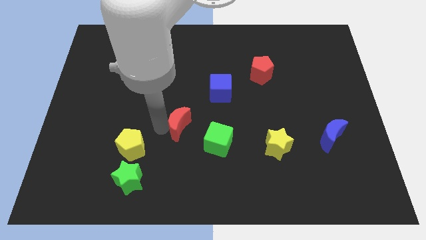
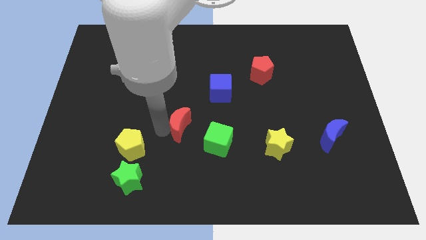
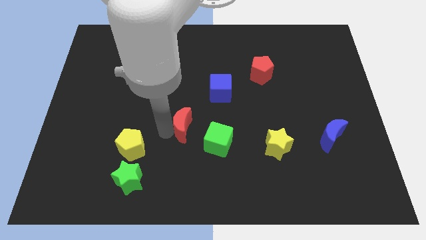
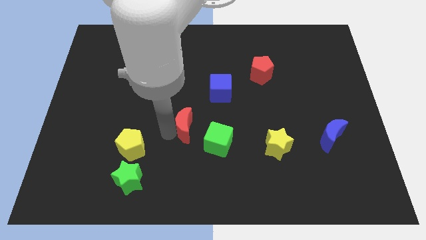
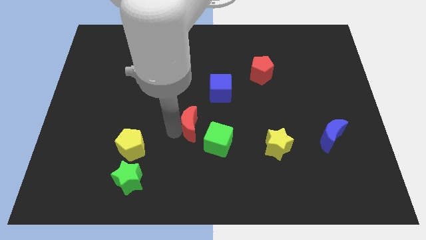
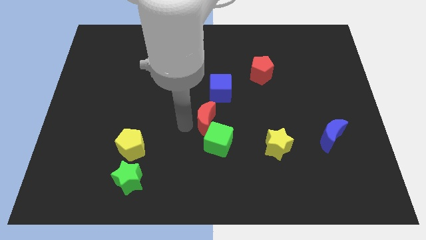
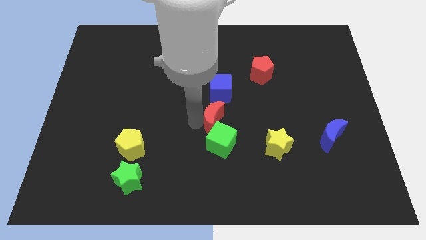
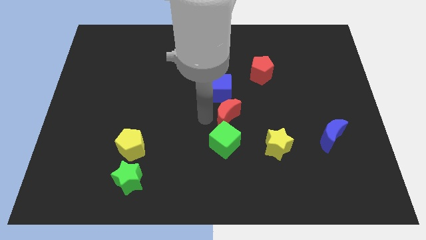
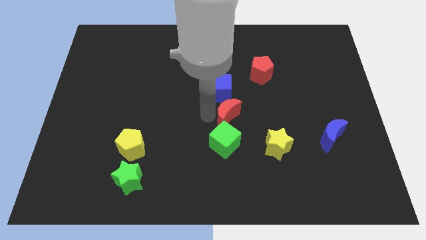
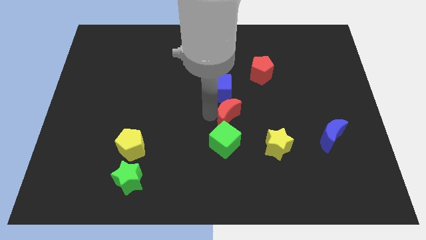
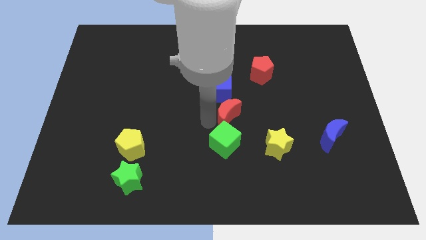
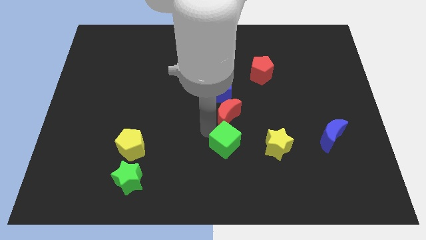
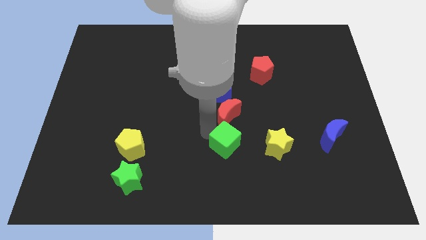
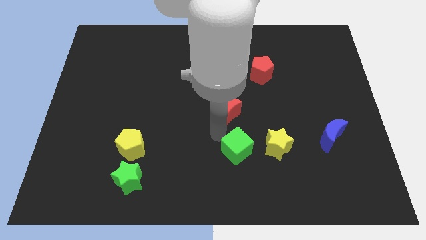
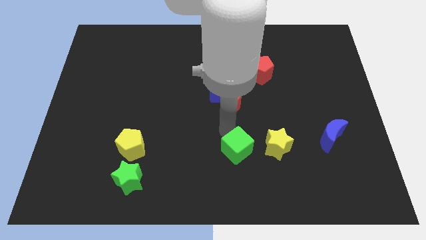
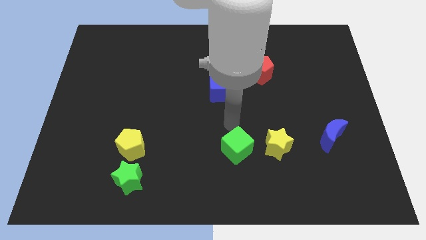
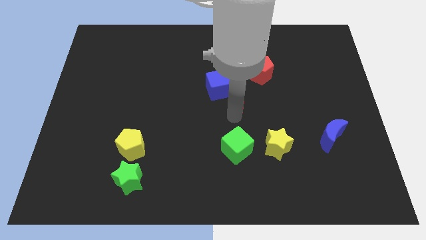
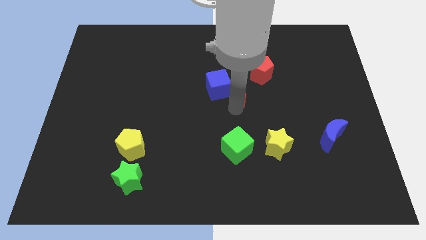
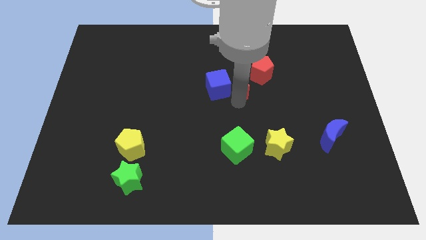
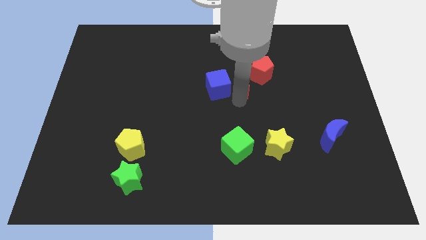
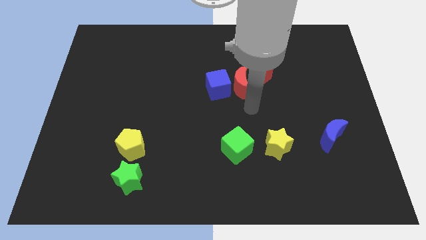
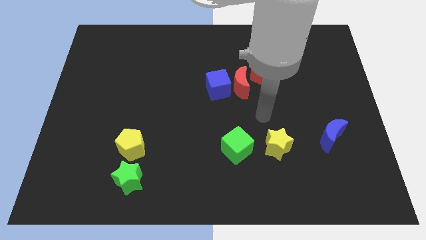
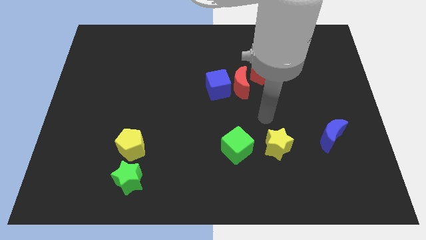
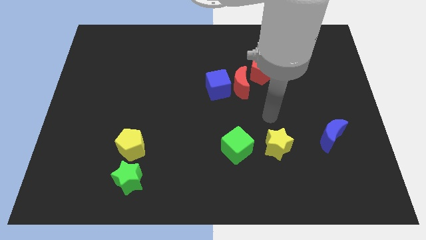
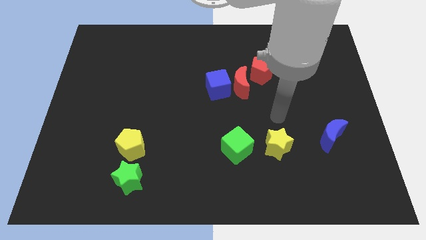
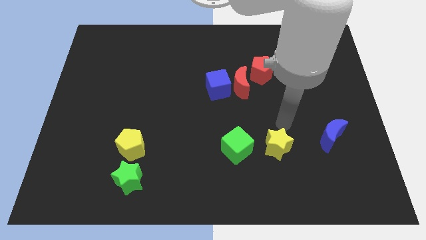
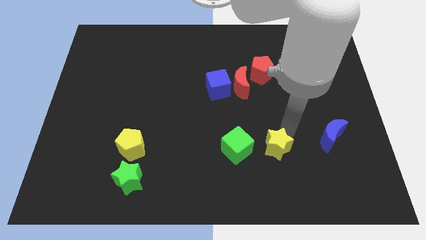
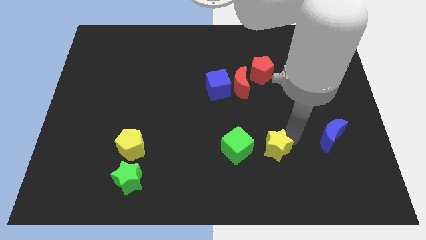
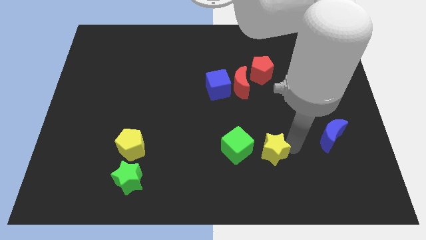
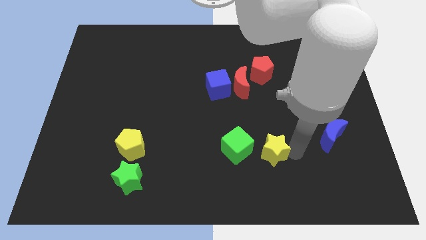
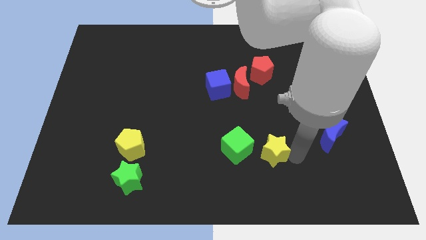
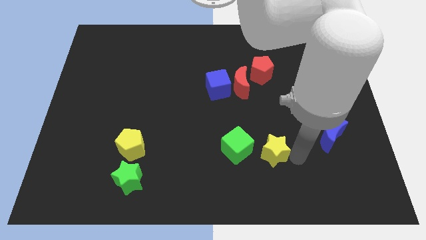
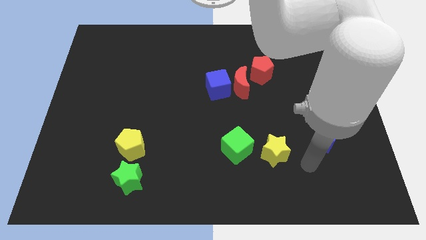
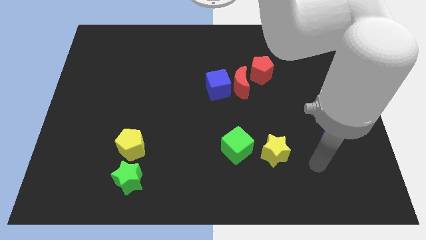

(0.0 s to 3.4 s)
move red crescent in between blue cube red pentagon

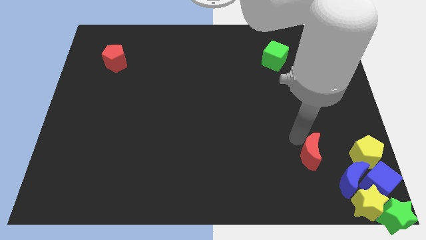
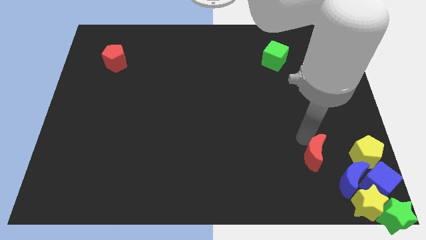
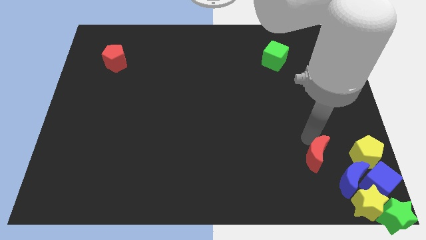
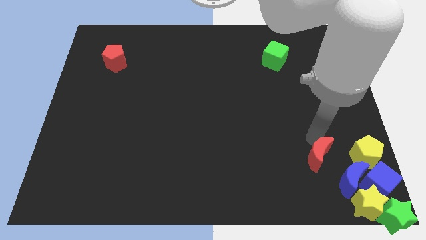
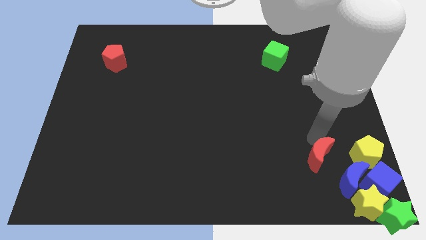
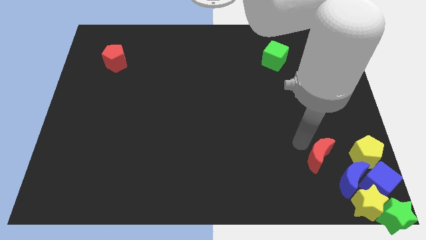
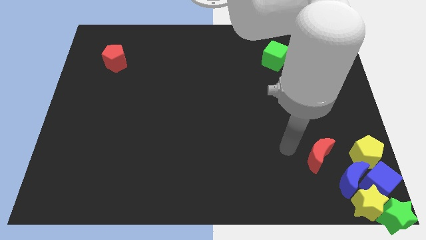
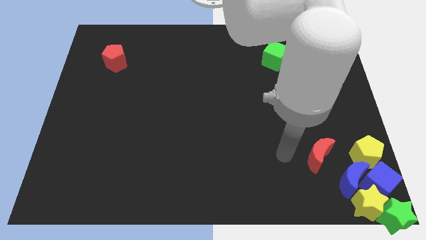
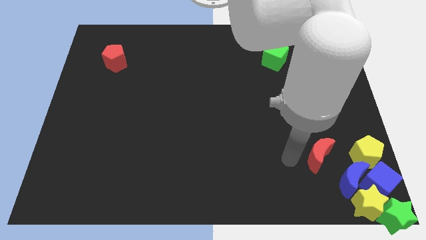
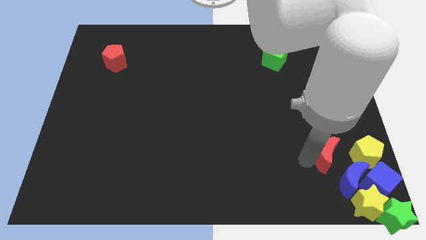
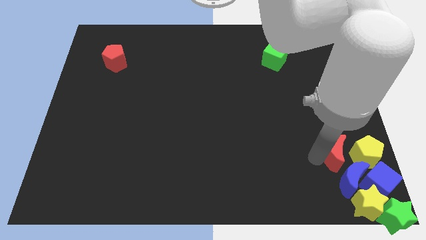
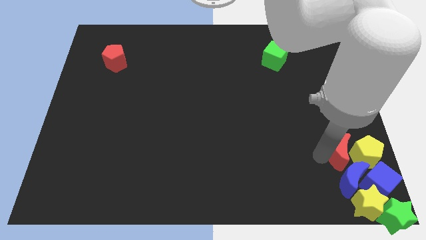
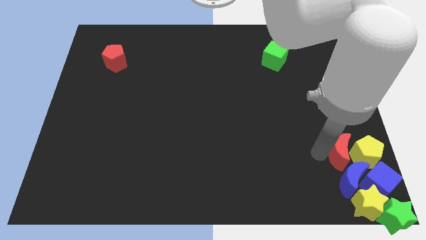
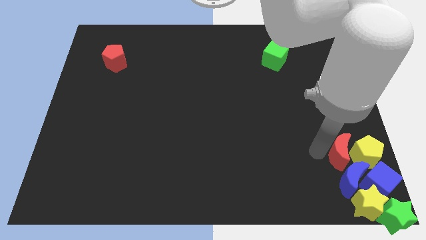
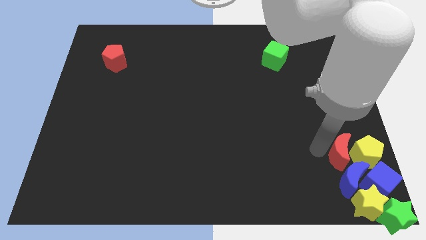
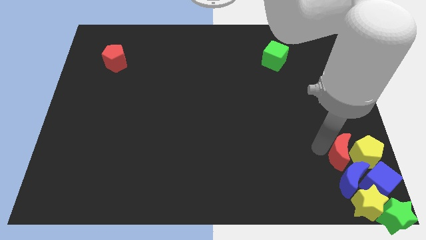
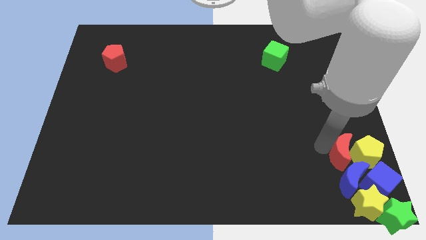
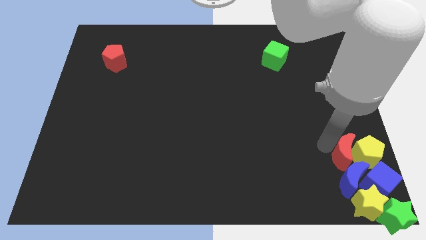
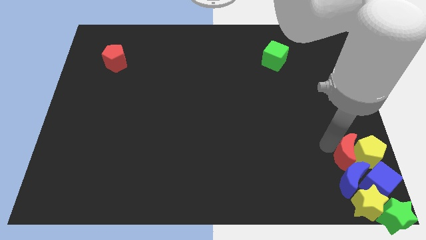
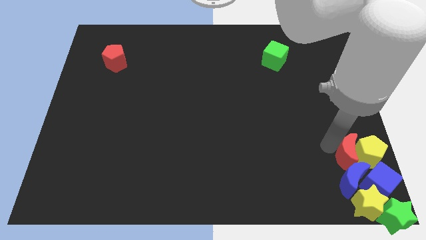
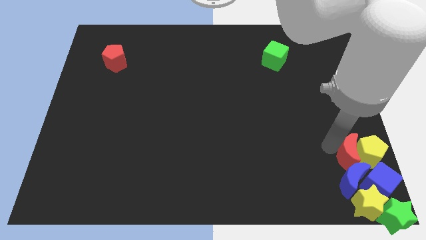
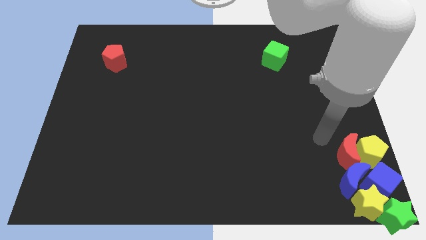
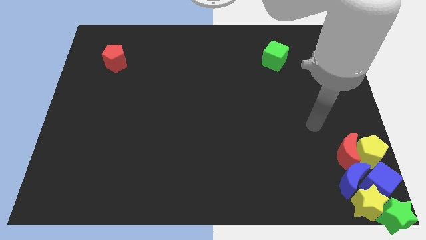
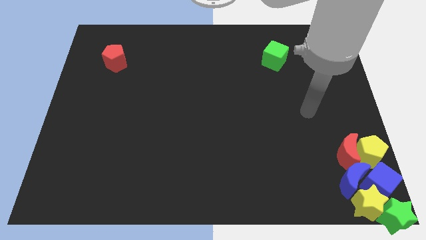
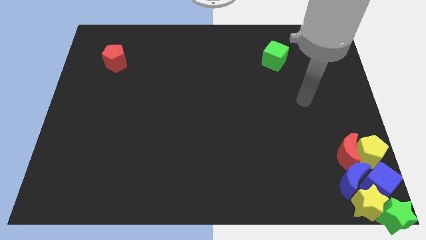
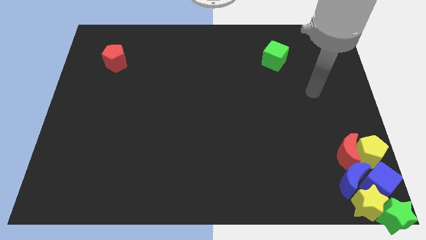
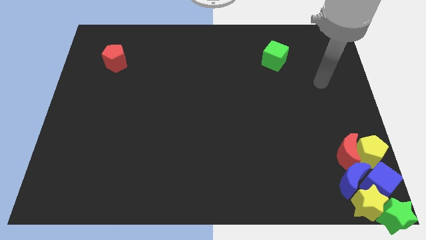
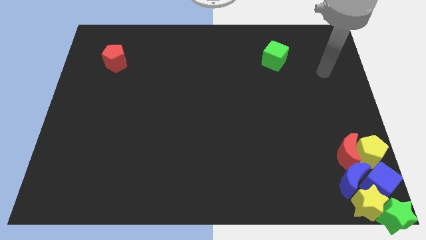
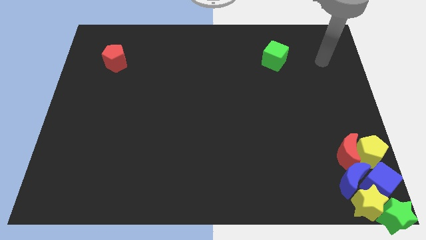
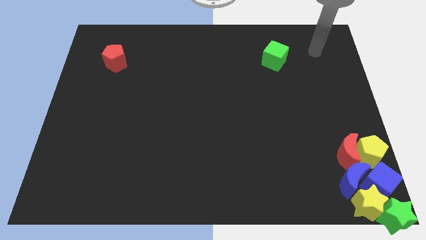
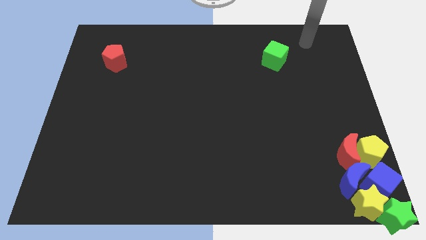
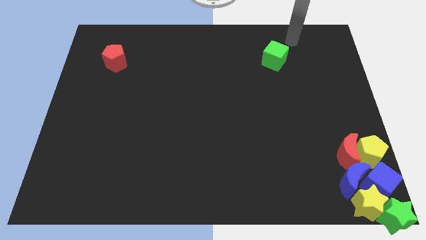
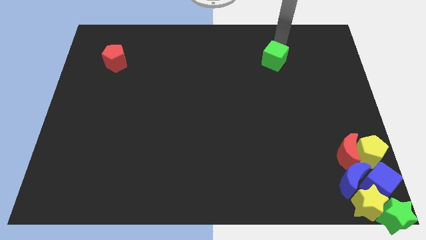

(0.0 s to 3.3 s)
push the red moon into the yellow pentagon

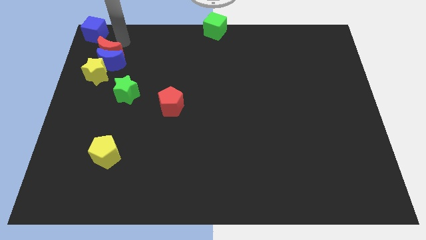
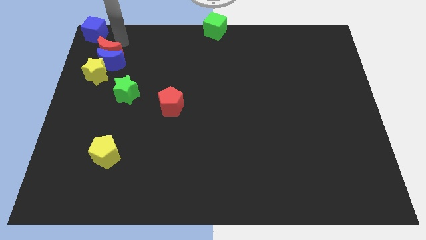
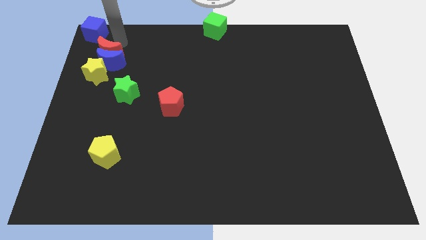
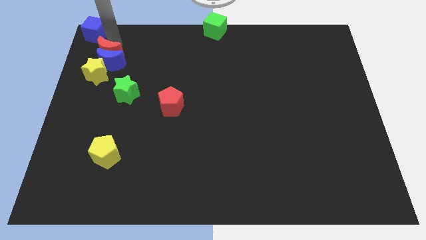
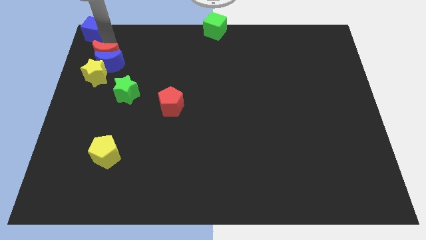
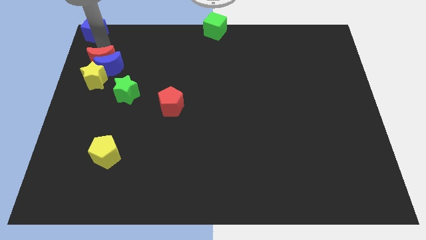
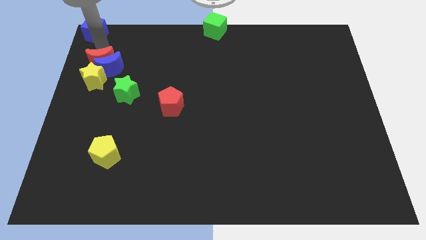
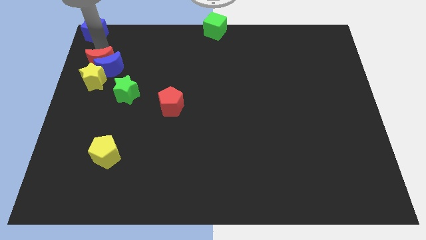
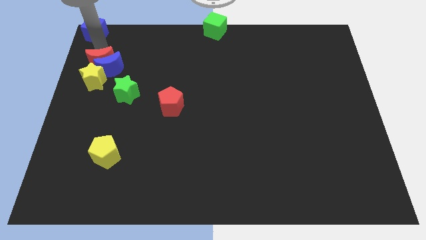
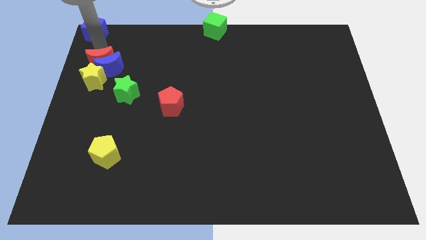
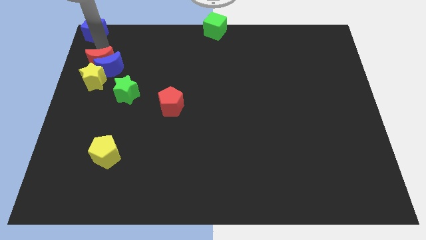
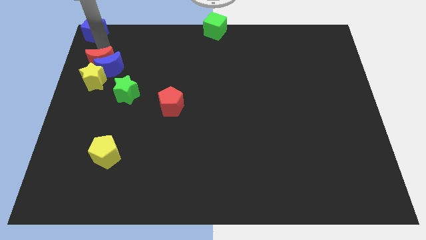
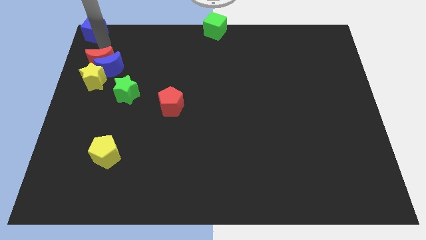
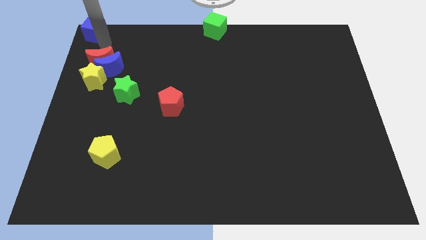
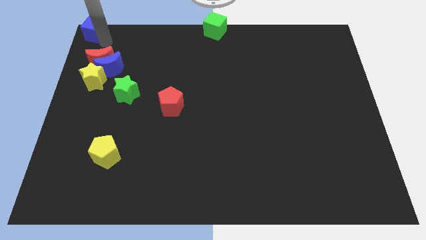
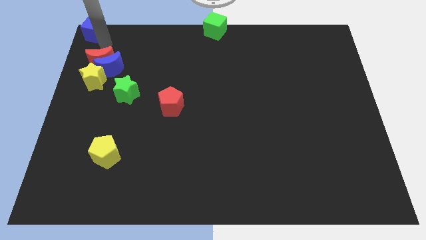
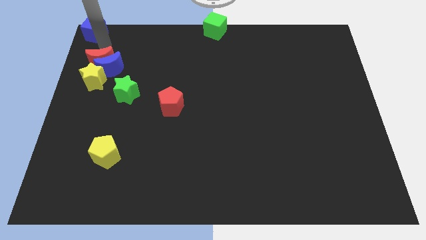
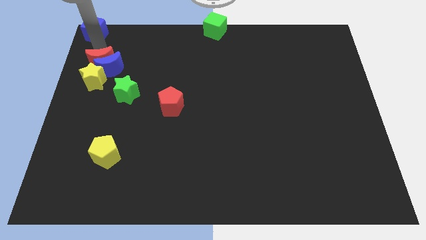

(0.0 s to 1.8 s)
slightly push the red moon into the blue moon

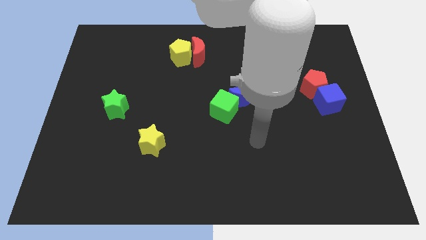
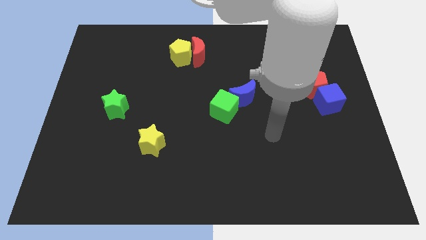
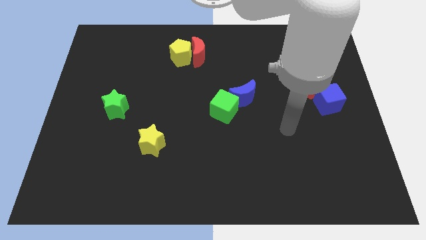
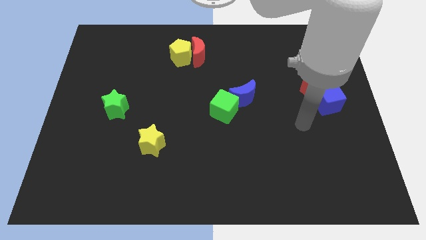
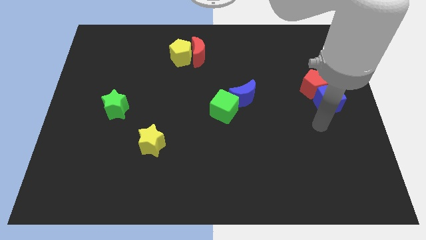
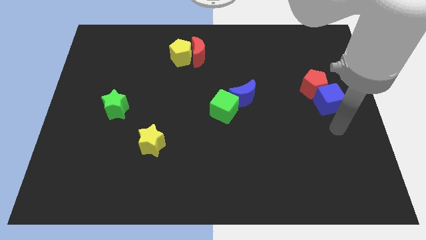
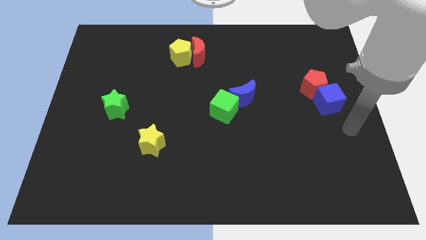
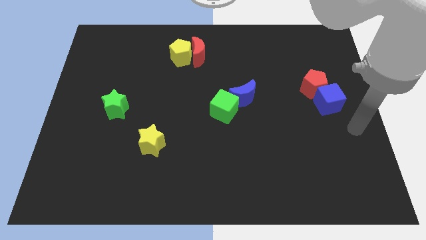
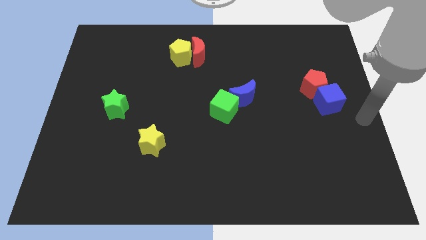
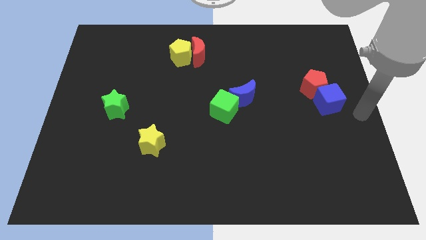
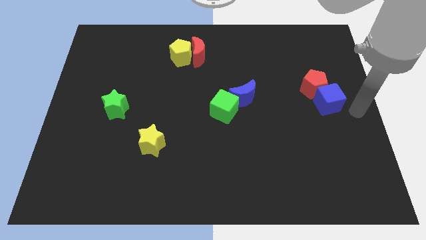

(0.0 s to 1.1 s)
push arm at center right of board
